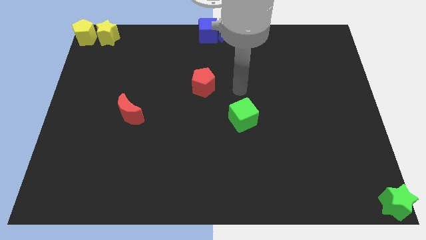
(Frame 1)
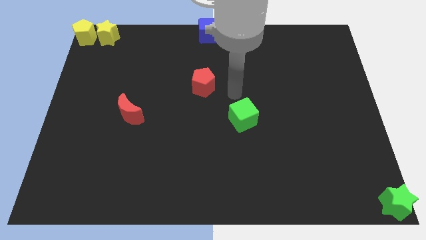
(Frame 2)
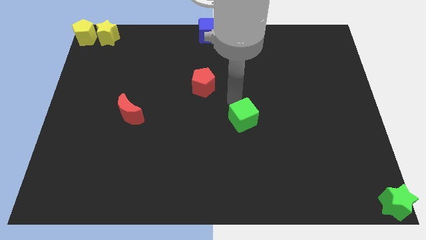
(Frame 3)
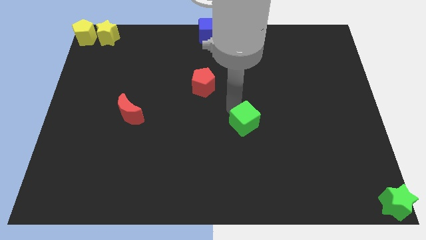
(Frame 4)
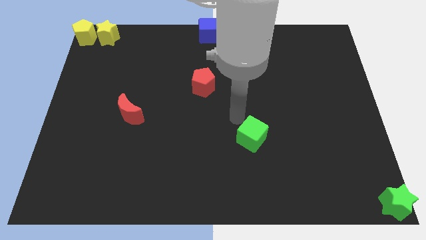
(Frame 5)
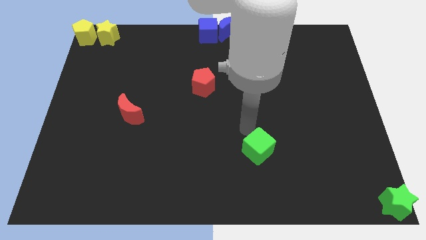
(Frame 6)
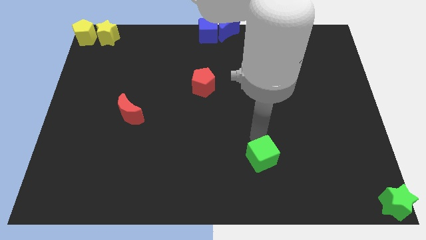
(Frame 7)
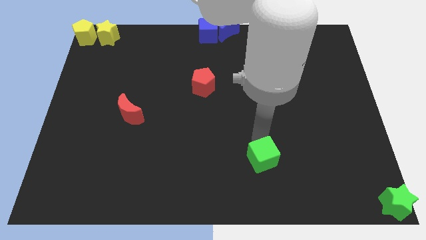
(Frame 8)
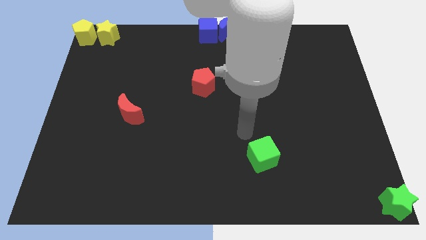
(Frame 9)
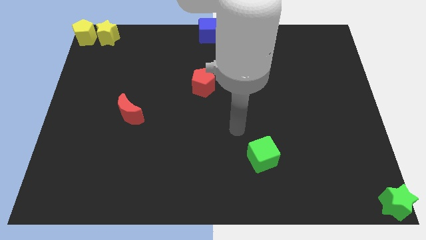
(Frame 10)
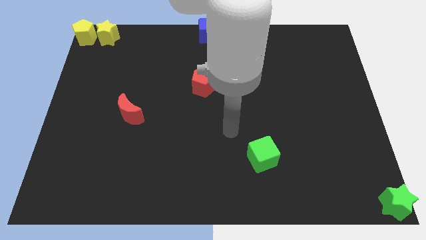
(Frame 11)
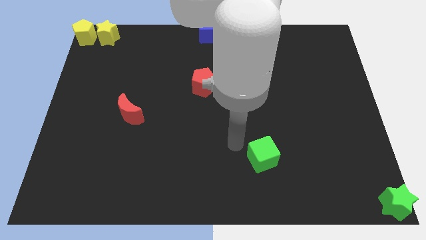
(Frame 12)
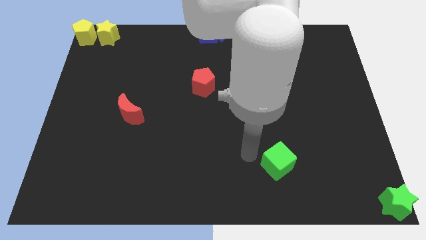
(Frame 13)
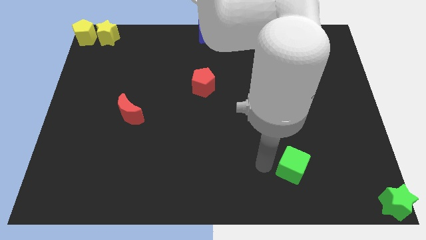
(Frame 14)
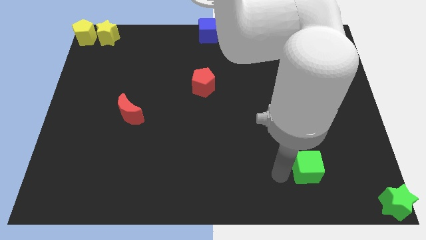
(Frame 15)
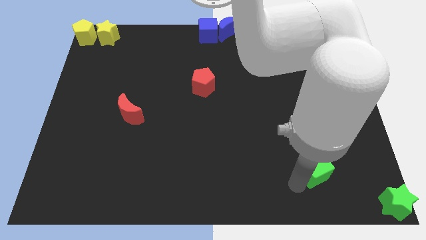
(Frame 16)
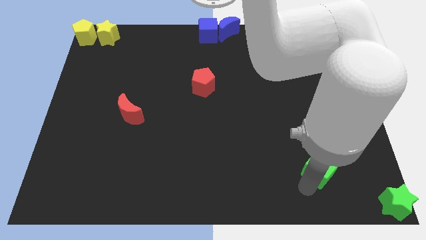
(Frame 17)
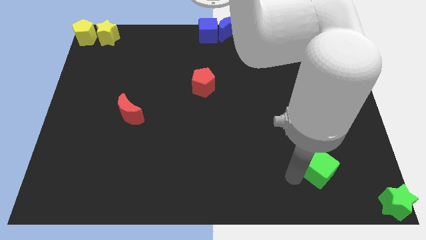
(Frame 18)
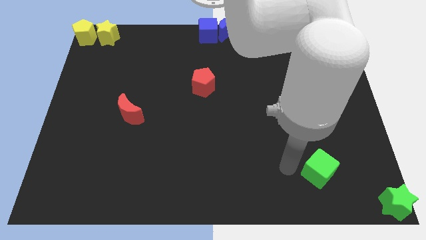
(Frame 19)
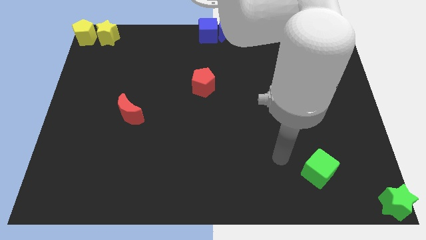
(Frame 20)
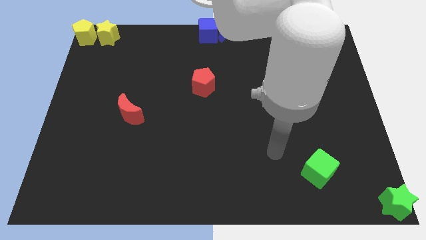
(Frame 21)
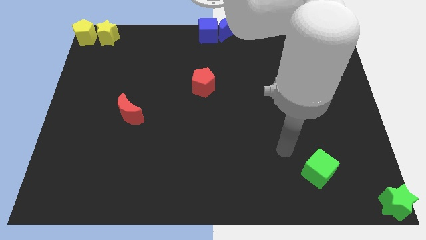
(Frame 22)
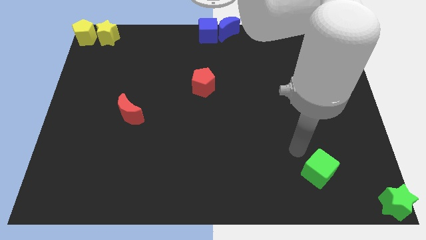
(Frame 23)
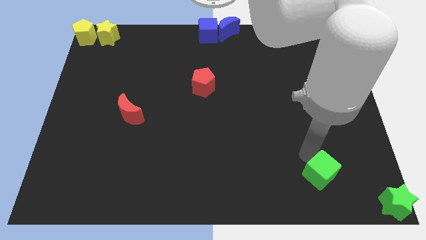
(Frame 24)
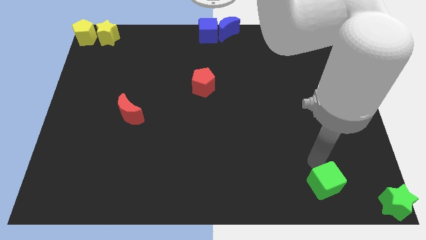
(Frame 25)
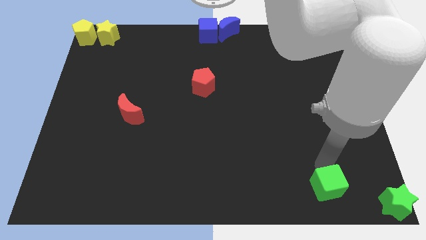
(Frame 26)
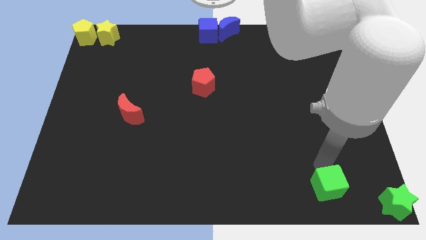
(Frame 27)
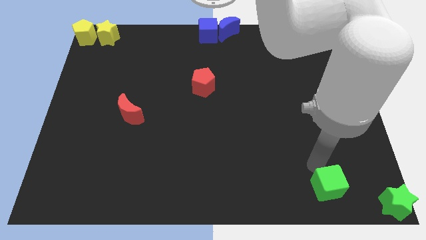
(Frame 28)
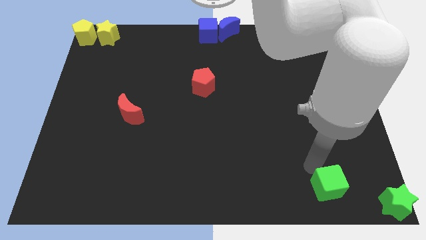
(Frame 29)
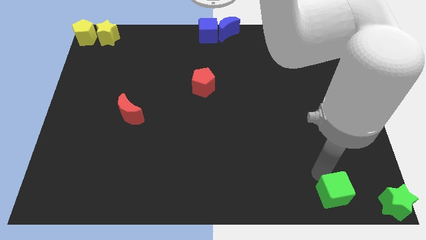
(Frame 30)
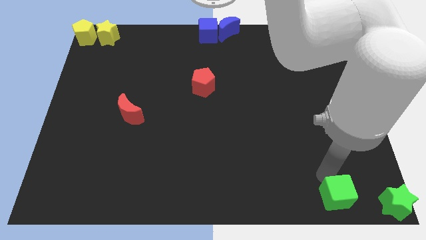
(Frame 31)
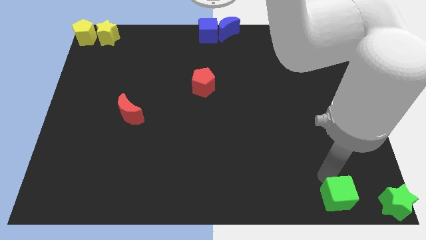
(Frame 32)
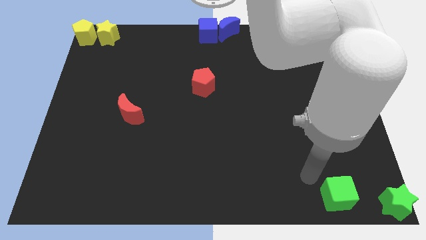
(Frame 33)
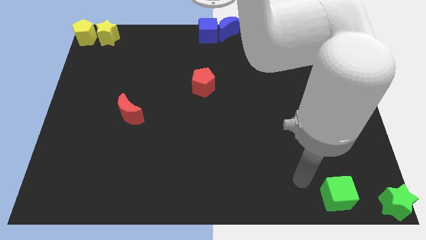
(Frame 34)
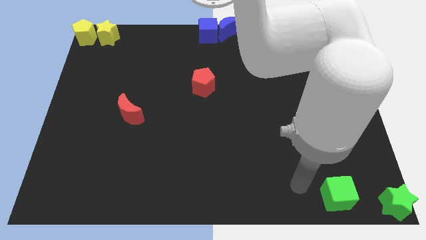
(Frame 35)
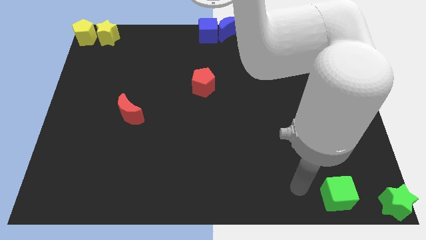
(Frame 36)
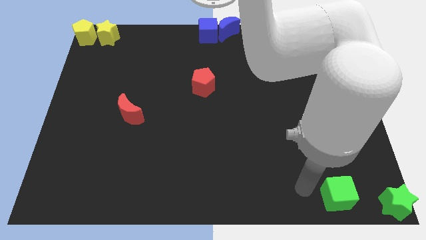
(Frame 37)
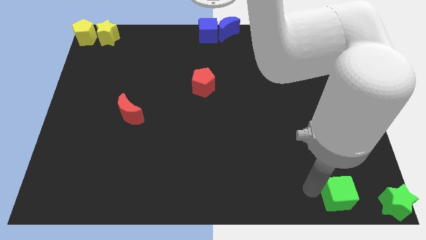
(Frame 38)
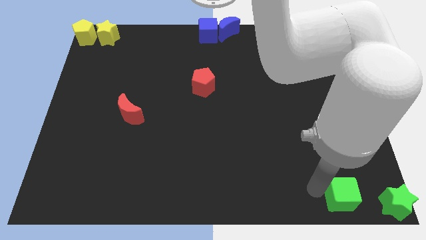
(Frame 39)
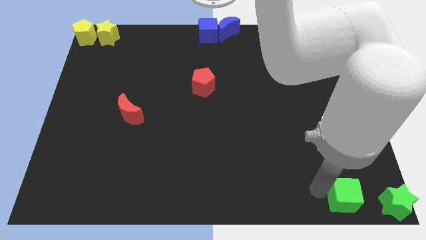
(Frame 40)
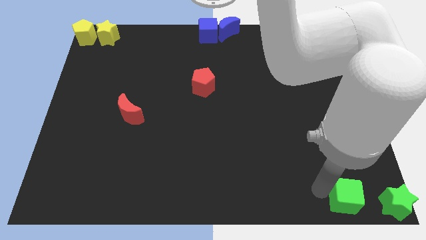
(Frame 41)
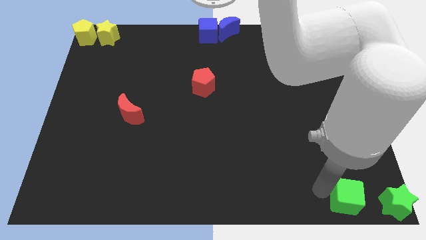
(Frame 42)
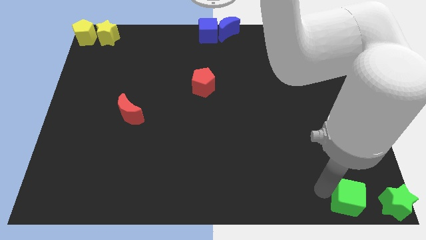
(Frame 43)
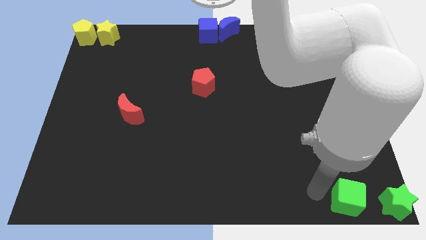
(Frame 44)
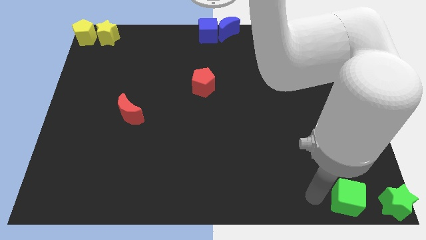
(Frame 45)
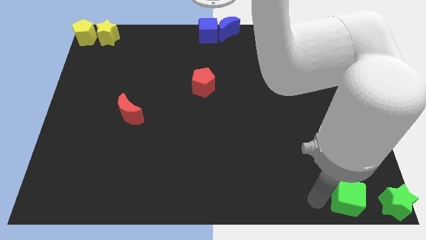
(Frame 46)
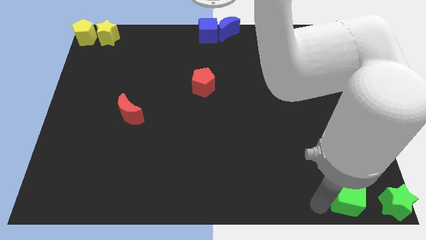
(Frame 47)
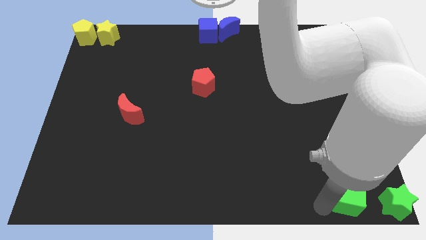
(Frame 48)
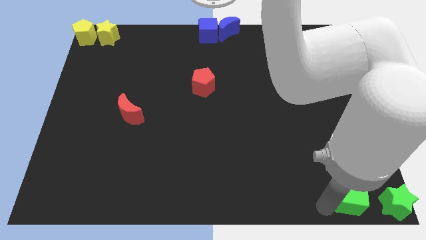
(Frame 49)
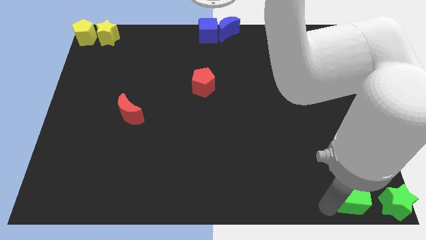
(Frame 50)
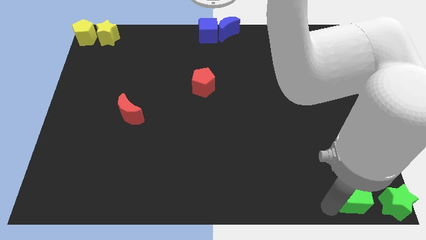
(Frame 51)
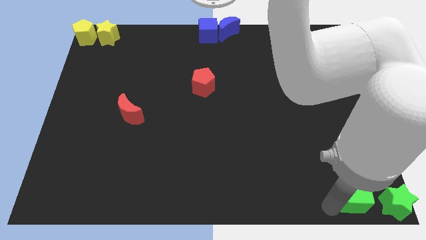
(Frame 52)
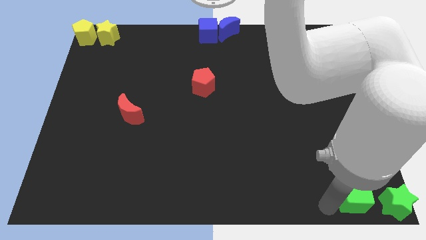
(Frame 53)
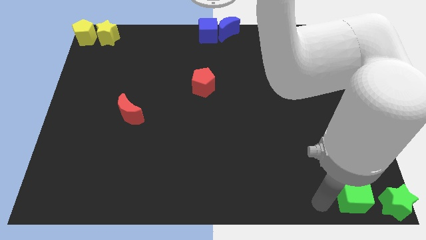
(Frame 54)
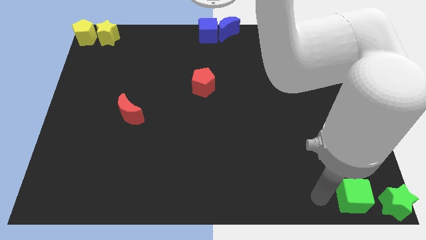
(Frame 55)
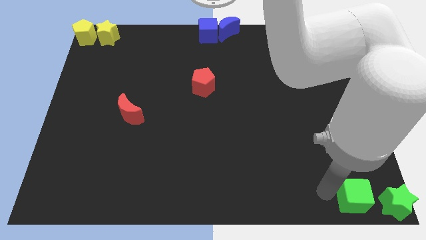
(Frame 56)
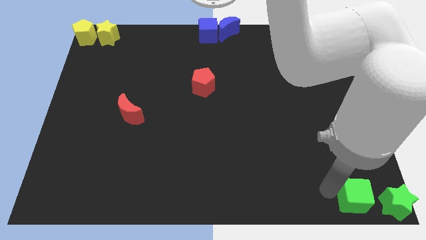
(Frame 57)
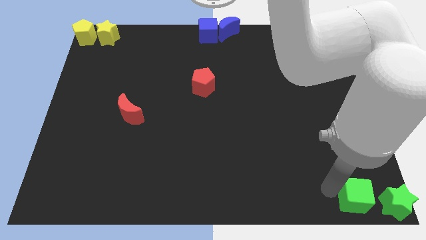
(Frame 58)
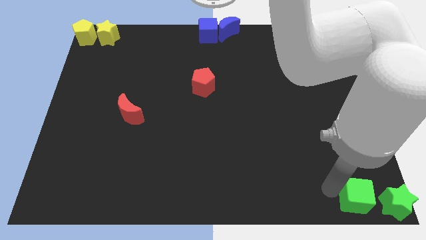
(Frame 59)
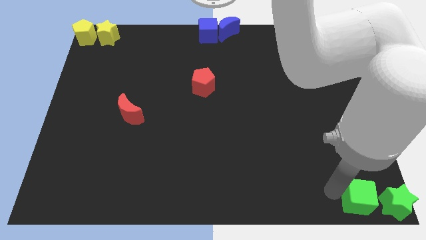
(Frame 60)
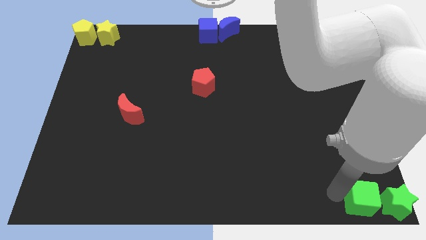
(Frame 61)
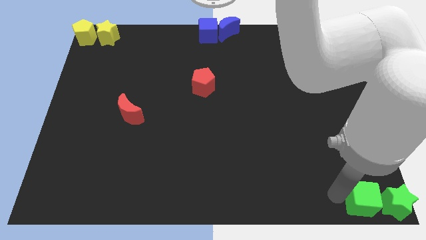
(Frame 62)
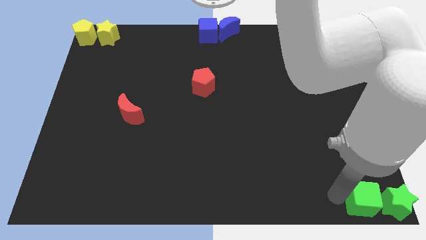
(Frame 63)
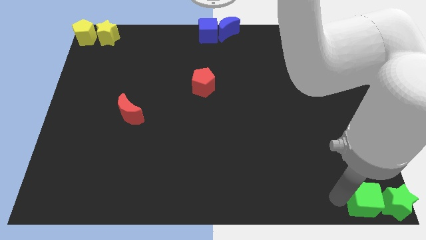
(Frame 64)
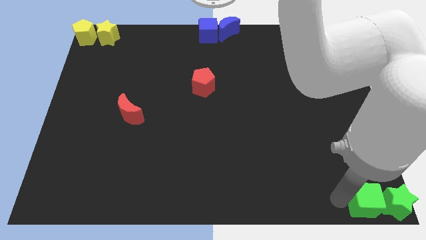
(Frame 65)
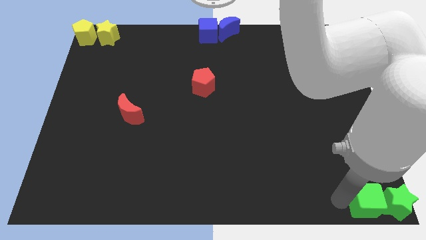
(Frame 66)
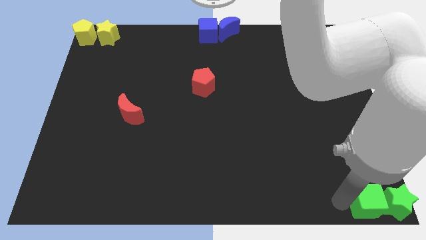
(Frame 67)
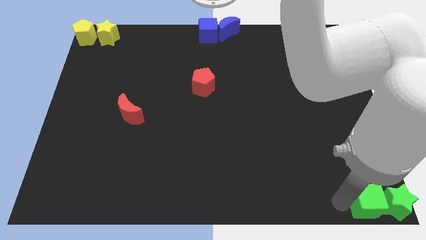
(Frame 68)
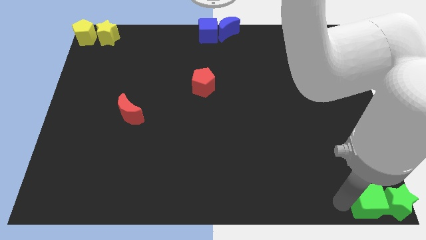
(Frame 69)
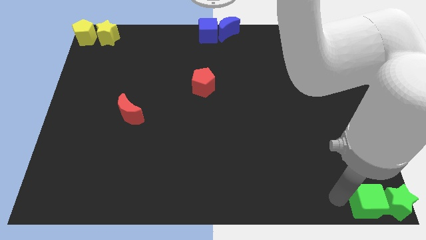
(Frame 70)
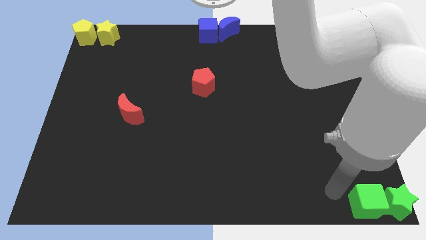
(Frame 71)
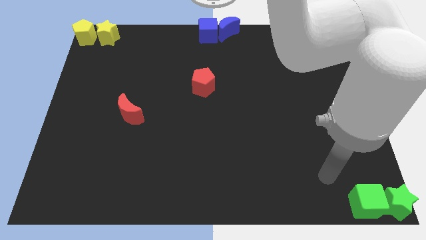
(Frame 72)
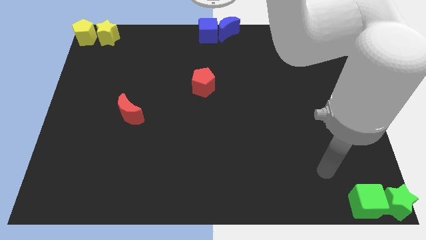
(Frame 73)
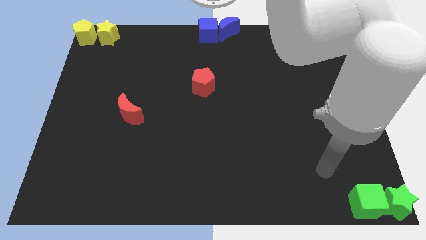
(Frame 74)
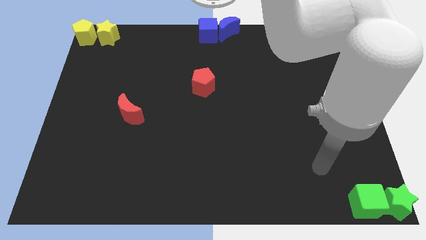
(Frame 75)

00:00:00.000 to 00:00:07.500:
push the green cube to the left side of the green star

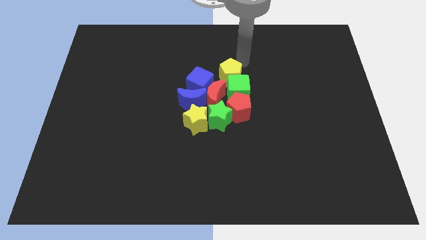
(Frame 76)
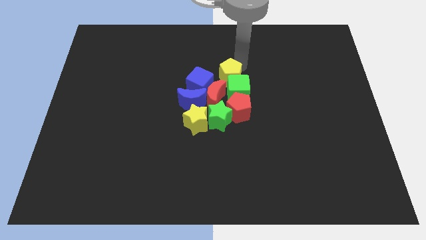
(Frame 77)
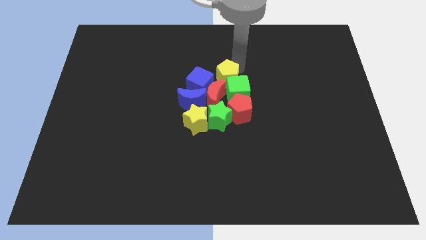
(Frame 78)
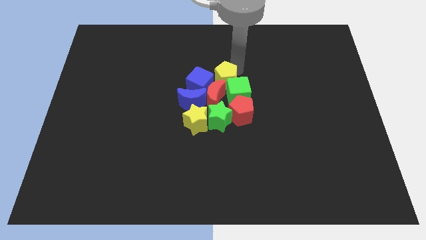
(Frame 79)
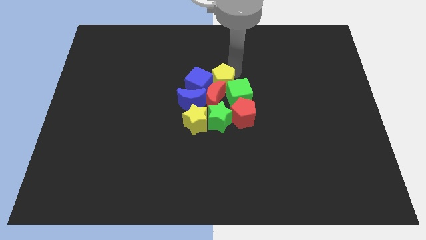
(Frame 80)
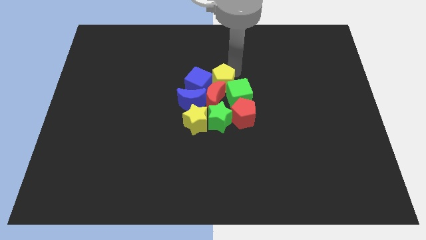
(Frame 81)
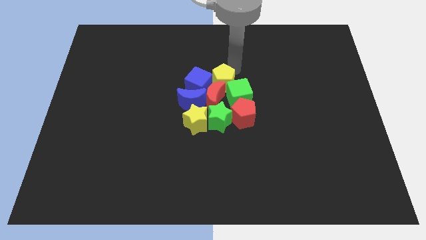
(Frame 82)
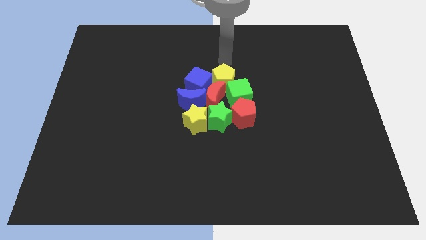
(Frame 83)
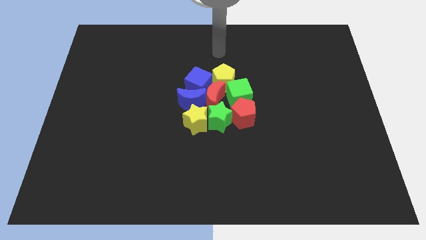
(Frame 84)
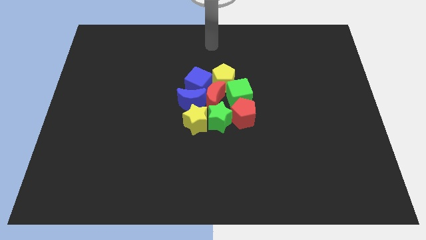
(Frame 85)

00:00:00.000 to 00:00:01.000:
push yellow pentagon into other blocks

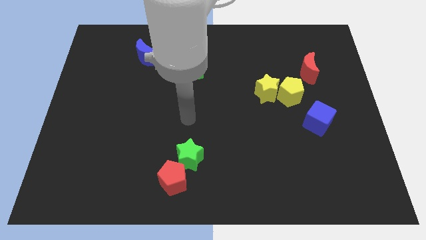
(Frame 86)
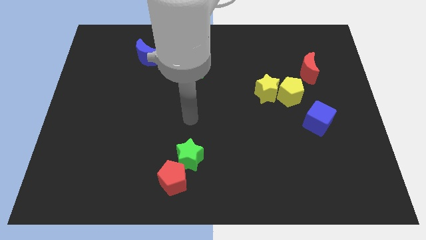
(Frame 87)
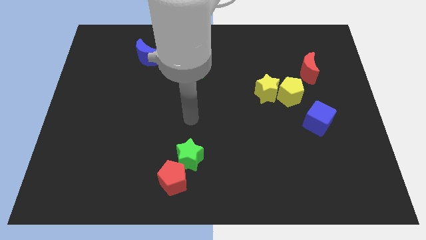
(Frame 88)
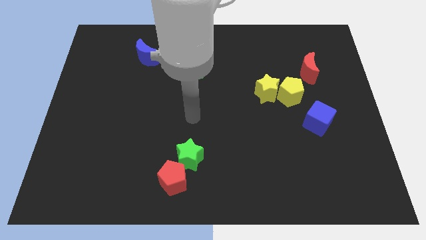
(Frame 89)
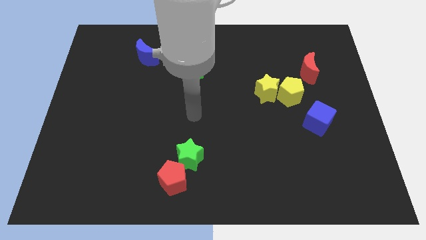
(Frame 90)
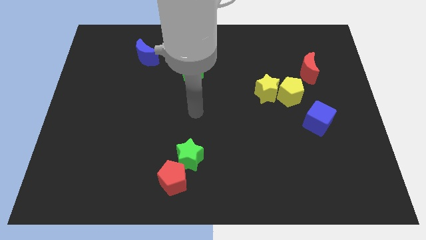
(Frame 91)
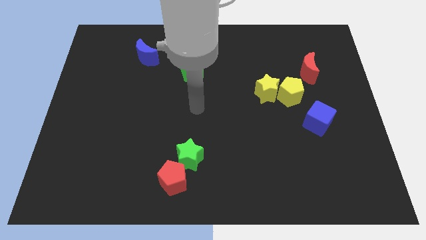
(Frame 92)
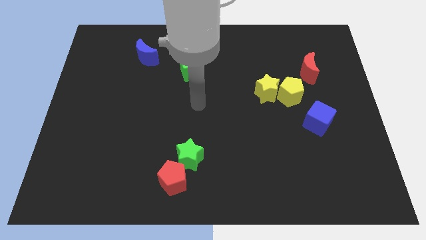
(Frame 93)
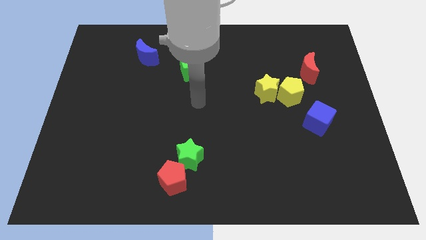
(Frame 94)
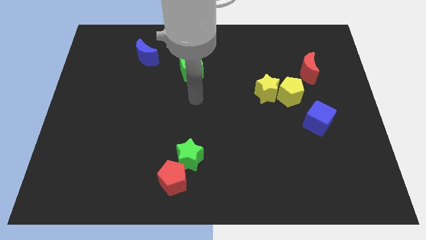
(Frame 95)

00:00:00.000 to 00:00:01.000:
place your arm to the center
